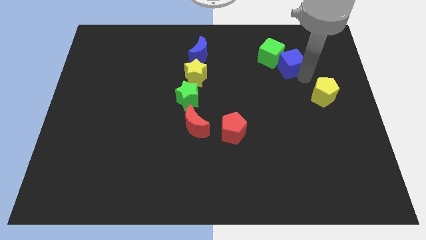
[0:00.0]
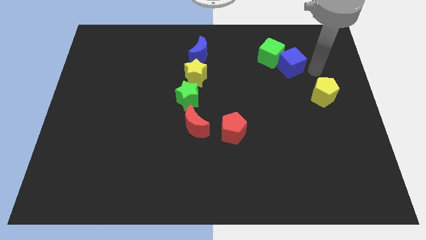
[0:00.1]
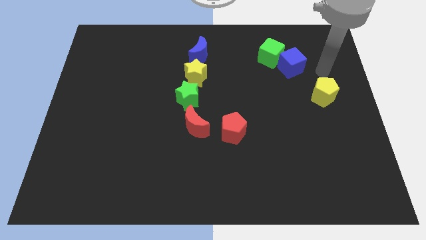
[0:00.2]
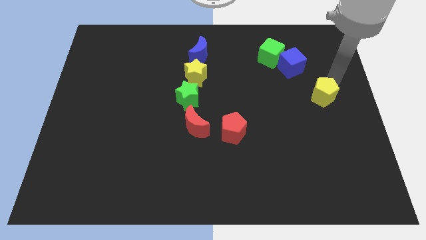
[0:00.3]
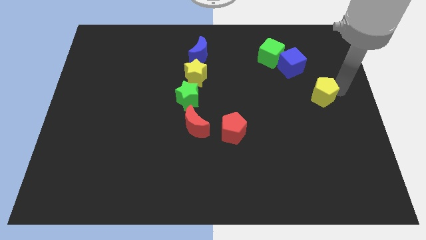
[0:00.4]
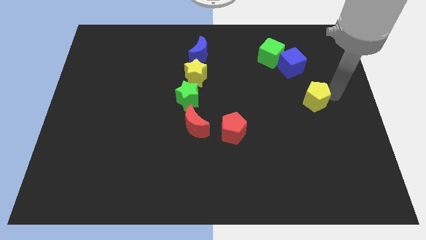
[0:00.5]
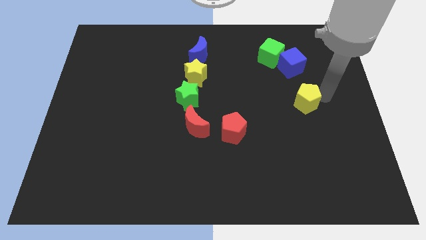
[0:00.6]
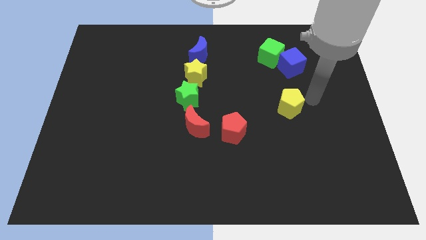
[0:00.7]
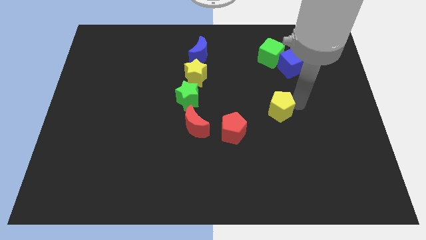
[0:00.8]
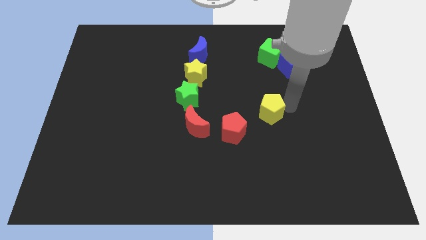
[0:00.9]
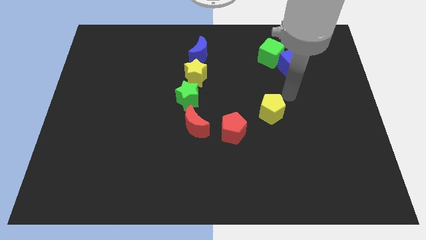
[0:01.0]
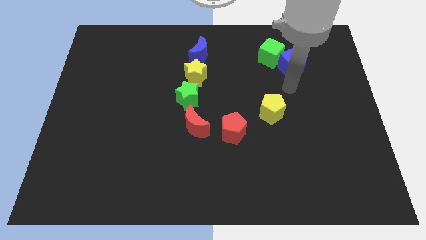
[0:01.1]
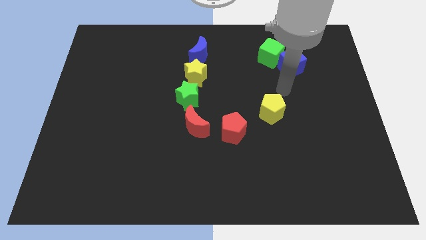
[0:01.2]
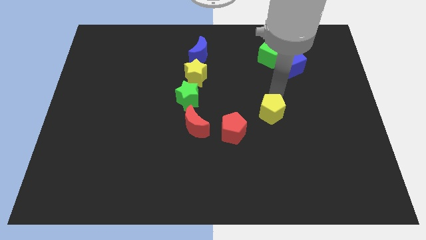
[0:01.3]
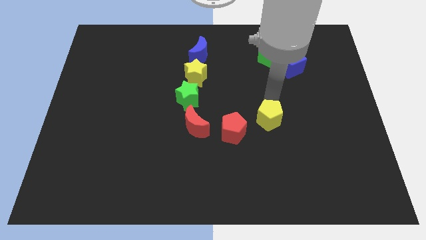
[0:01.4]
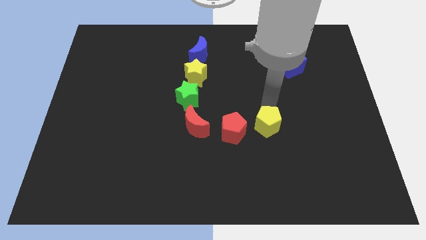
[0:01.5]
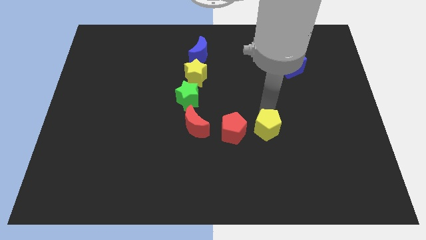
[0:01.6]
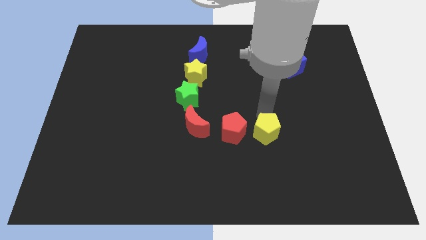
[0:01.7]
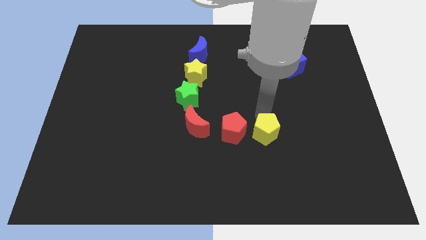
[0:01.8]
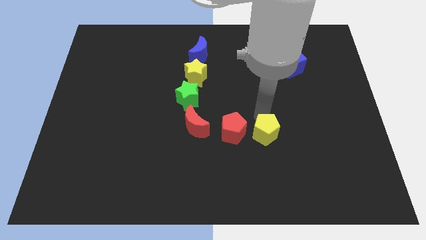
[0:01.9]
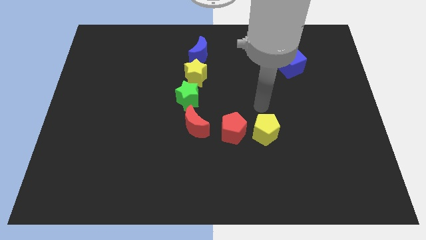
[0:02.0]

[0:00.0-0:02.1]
place yellow pentagon to the right of red pentagon

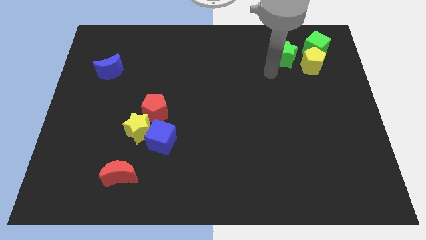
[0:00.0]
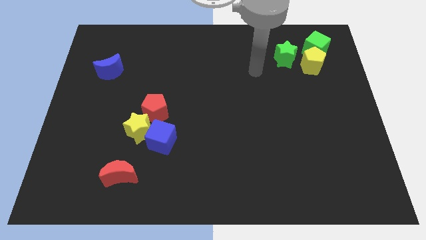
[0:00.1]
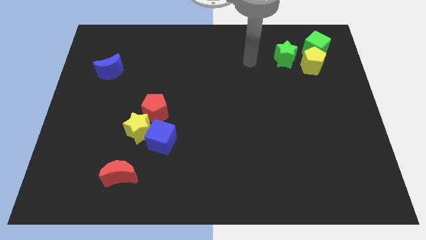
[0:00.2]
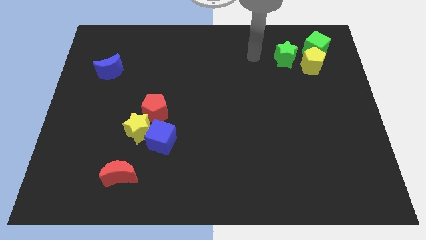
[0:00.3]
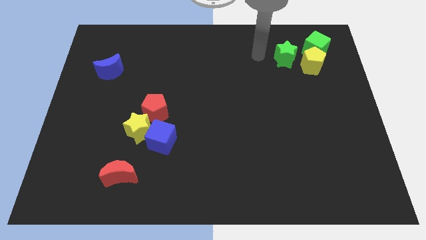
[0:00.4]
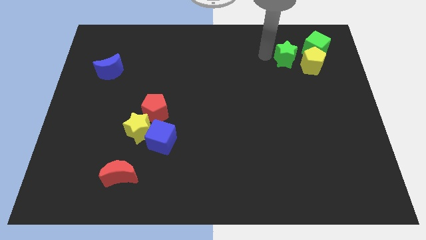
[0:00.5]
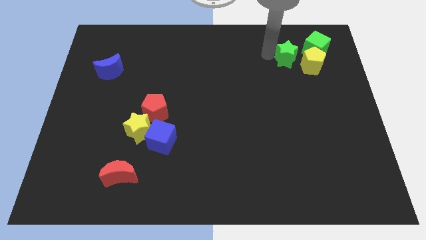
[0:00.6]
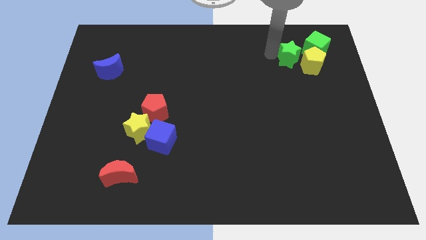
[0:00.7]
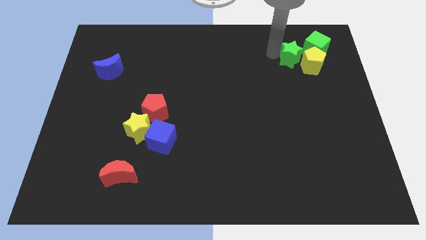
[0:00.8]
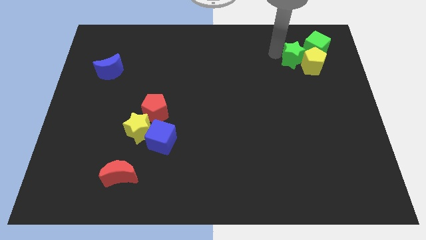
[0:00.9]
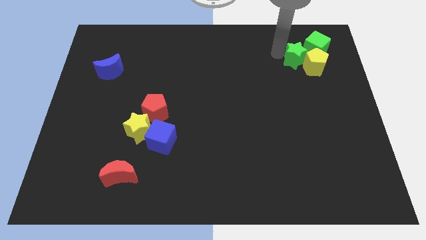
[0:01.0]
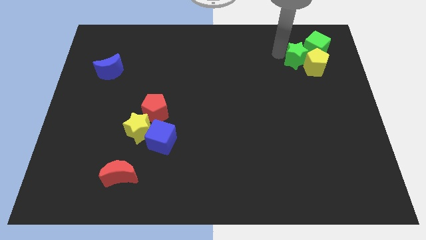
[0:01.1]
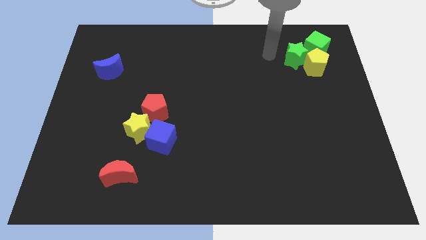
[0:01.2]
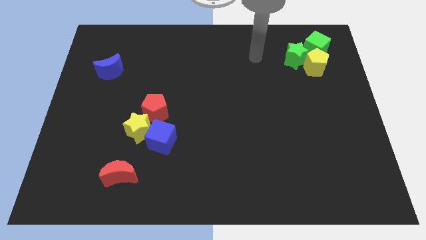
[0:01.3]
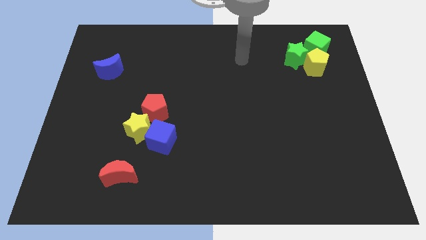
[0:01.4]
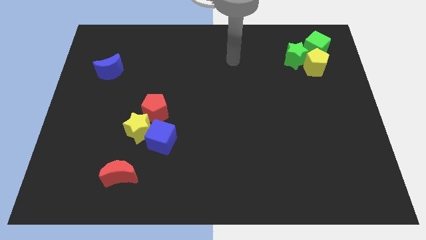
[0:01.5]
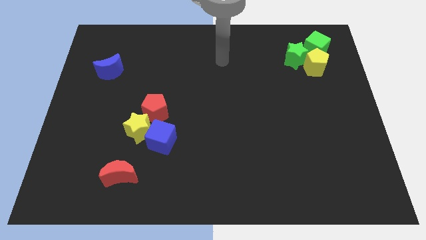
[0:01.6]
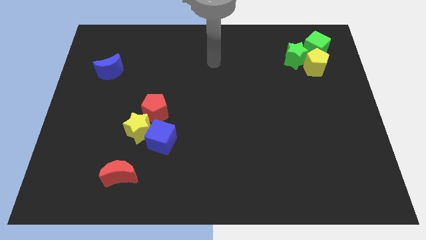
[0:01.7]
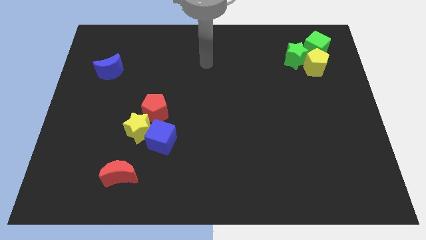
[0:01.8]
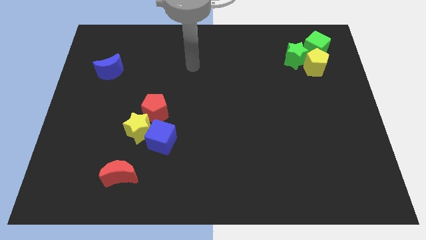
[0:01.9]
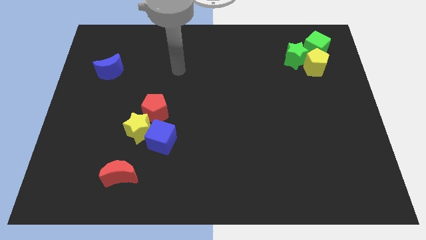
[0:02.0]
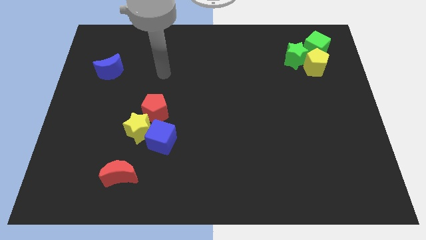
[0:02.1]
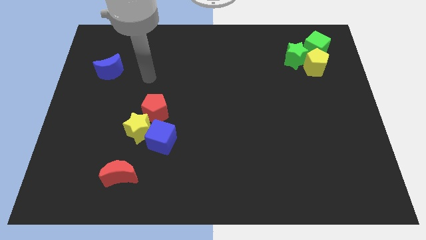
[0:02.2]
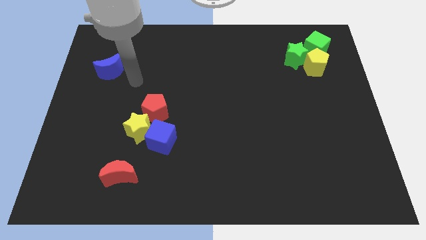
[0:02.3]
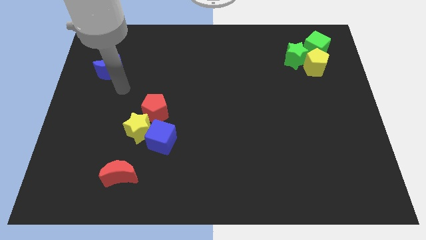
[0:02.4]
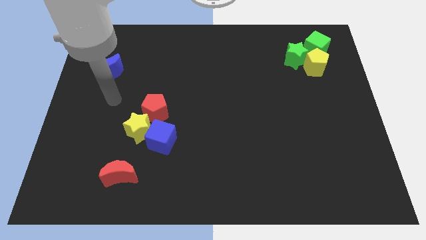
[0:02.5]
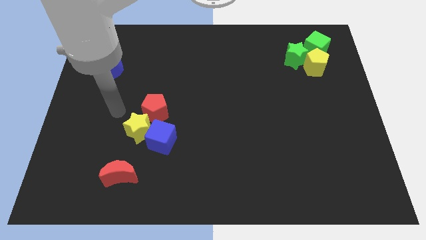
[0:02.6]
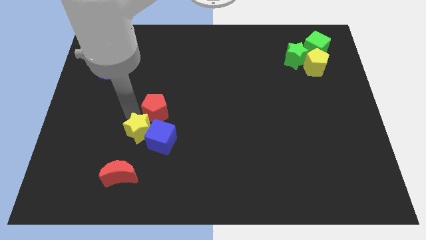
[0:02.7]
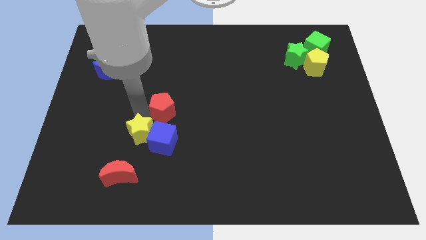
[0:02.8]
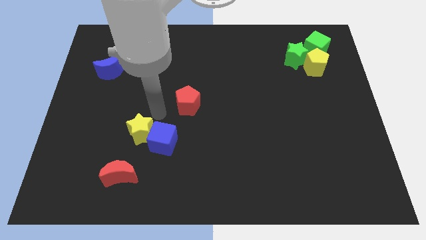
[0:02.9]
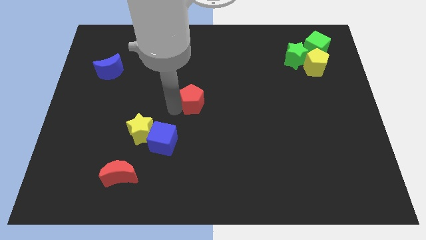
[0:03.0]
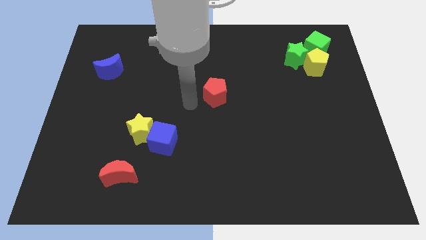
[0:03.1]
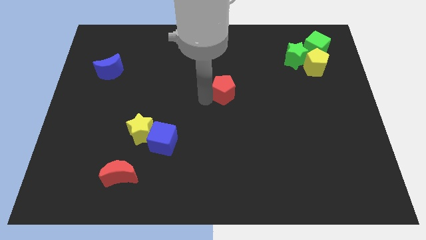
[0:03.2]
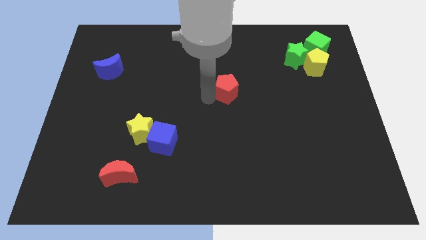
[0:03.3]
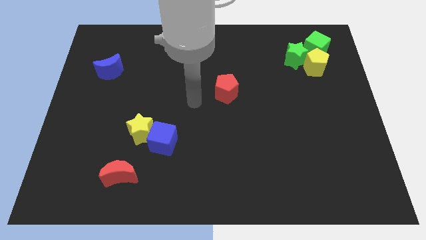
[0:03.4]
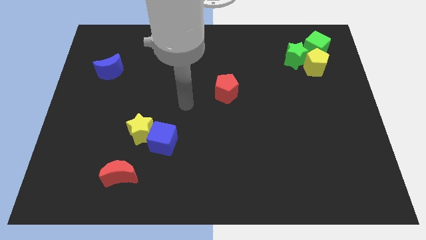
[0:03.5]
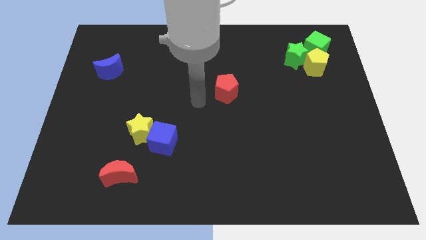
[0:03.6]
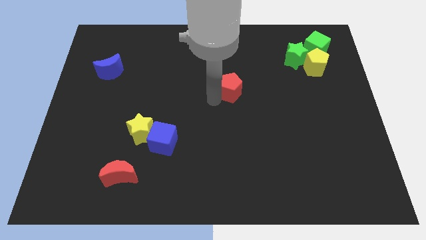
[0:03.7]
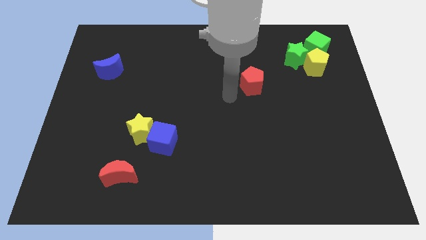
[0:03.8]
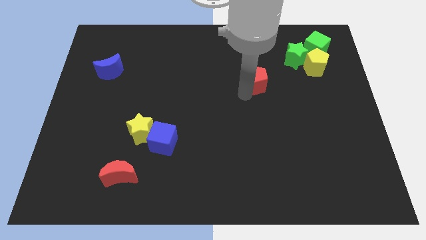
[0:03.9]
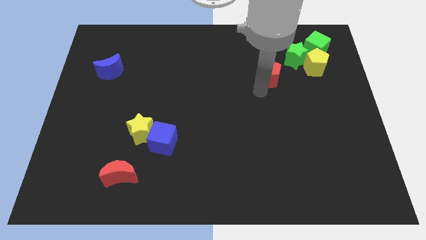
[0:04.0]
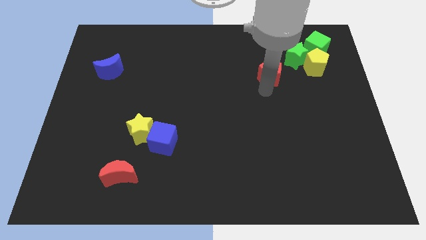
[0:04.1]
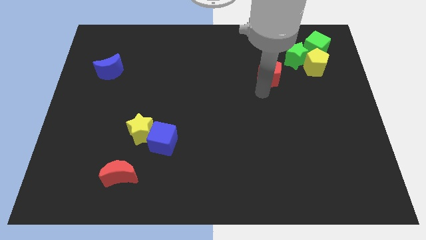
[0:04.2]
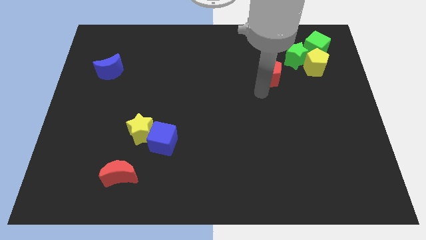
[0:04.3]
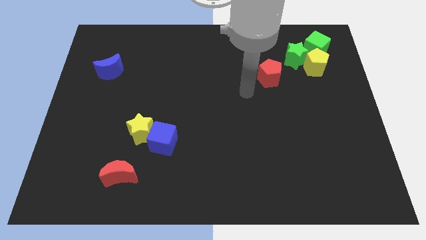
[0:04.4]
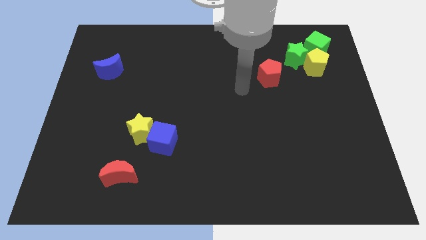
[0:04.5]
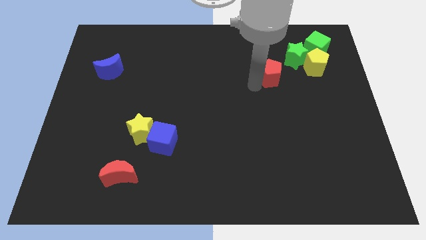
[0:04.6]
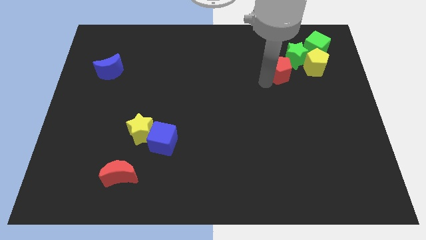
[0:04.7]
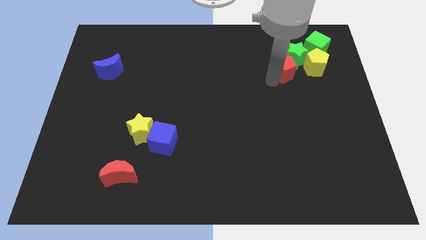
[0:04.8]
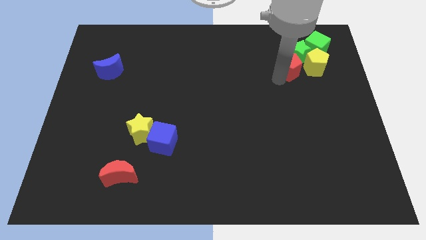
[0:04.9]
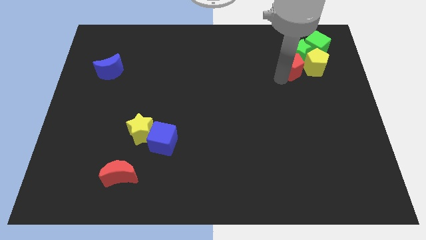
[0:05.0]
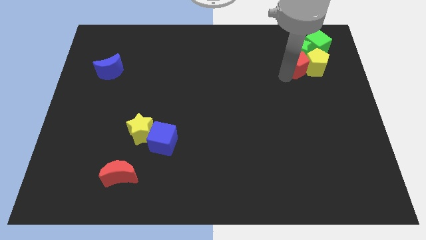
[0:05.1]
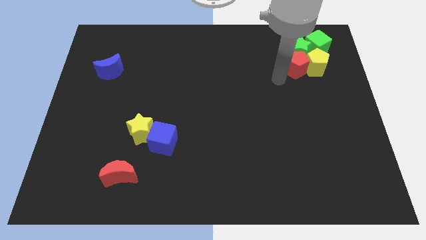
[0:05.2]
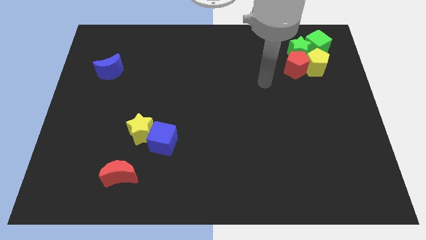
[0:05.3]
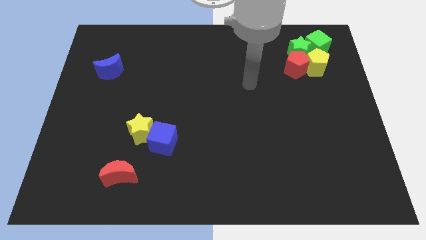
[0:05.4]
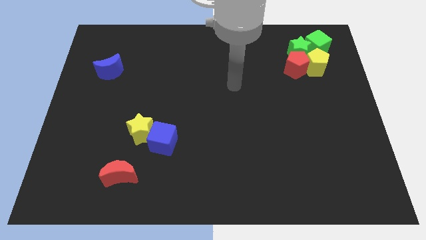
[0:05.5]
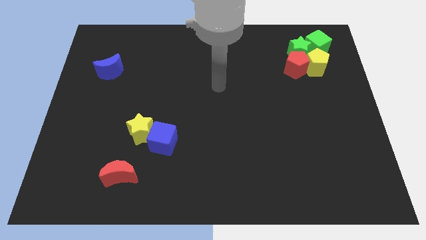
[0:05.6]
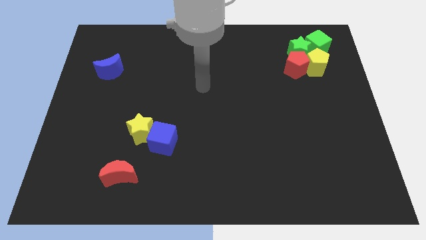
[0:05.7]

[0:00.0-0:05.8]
push the red pentagon into the group of blocks

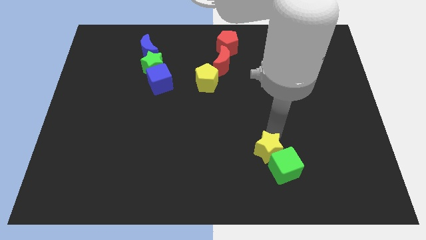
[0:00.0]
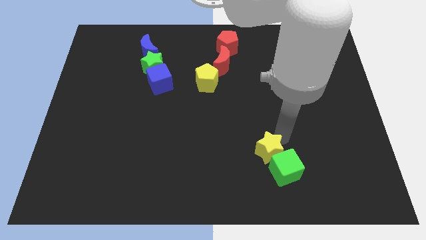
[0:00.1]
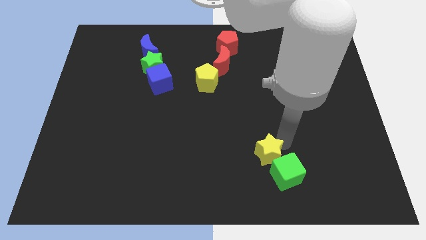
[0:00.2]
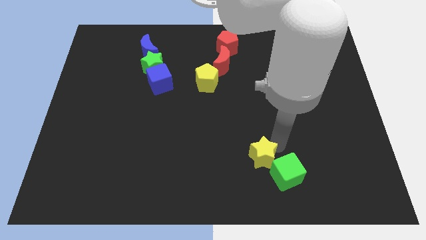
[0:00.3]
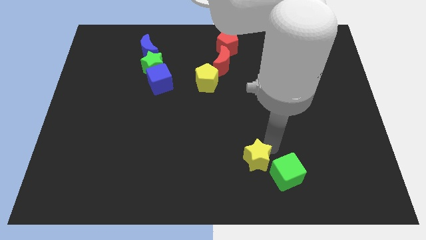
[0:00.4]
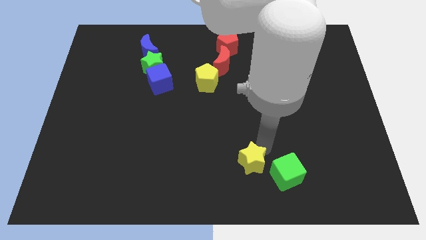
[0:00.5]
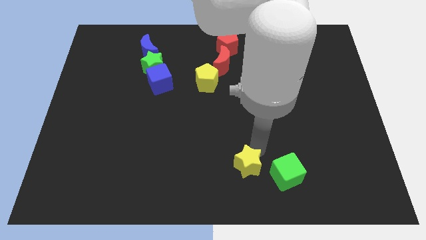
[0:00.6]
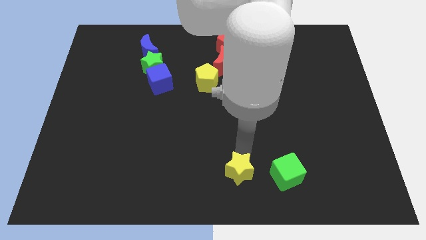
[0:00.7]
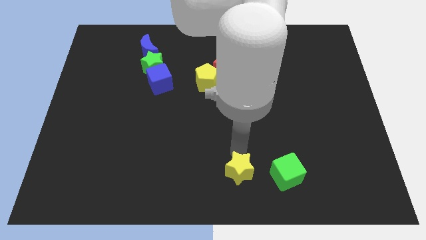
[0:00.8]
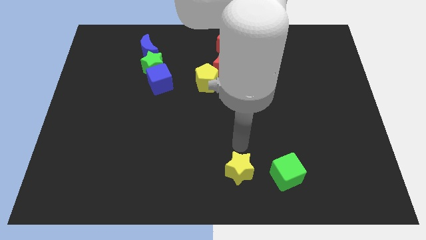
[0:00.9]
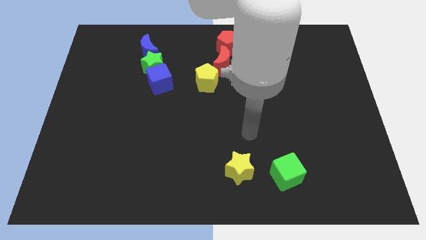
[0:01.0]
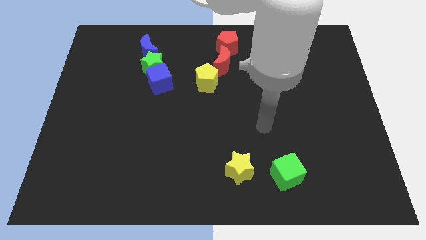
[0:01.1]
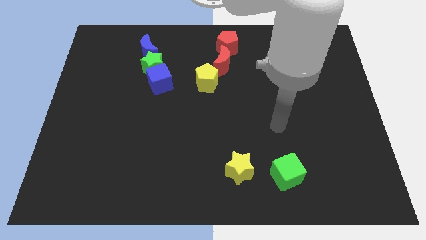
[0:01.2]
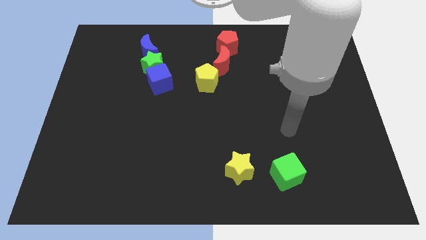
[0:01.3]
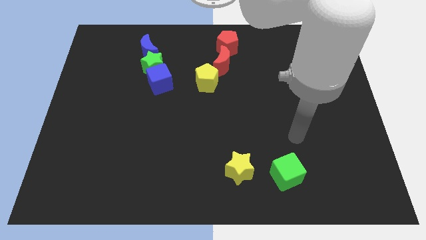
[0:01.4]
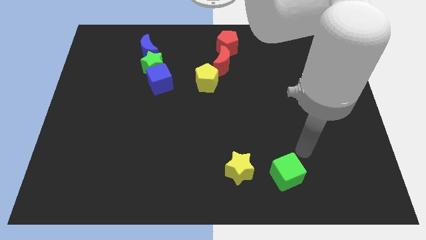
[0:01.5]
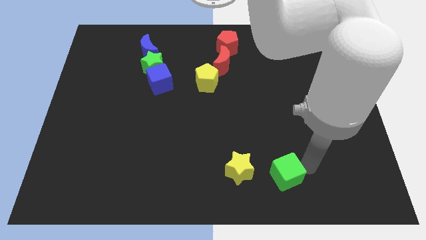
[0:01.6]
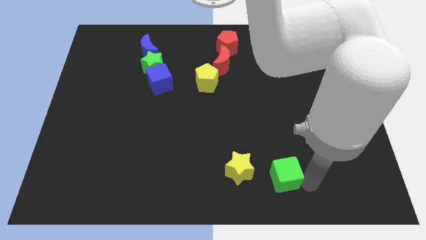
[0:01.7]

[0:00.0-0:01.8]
separate yellow star from the green cube
